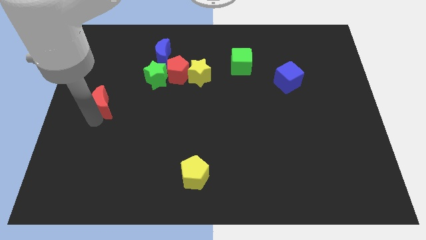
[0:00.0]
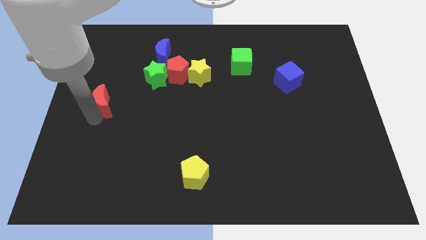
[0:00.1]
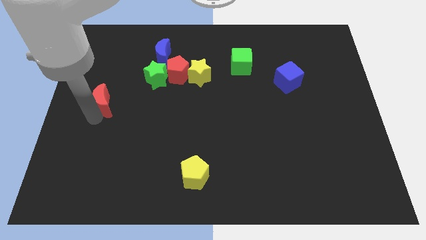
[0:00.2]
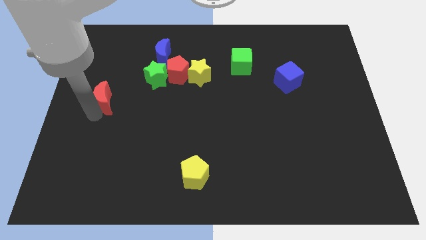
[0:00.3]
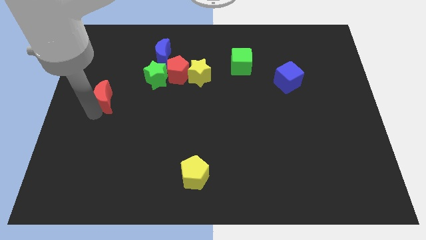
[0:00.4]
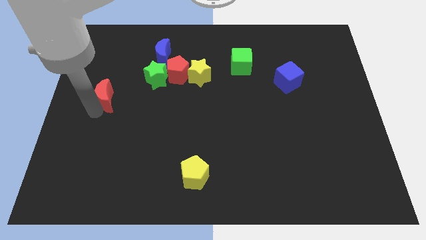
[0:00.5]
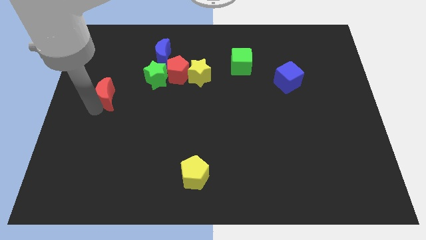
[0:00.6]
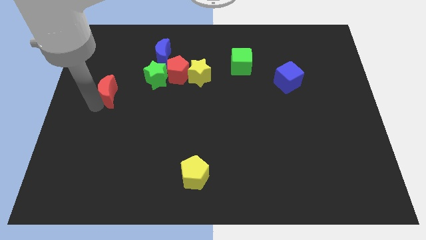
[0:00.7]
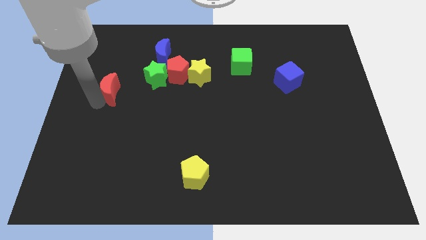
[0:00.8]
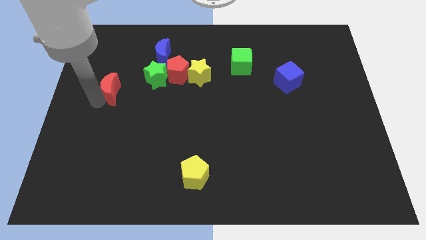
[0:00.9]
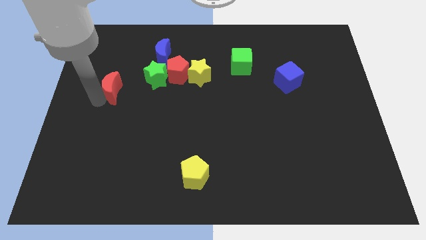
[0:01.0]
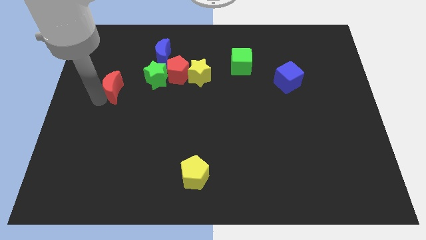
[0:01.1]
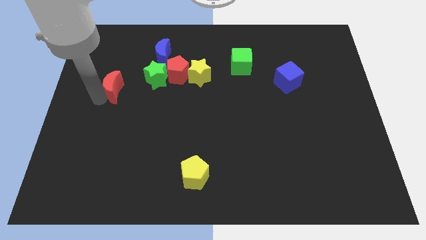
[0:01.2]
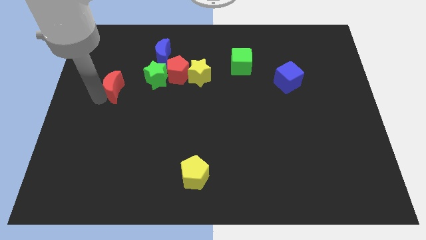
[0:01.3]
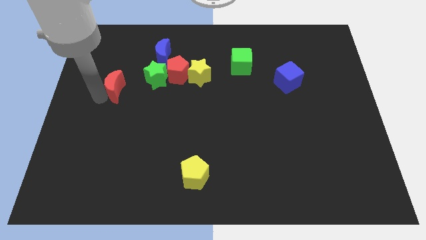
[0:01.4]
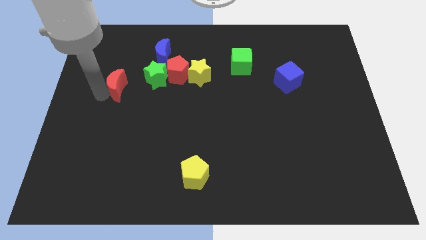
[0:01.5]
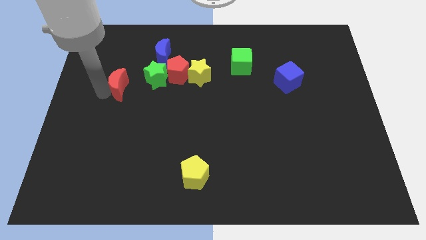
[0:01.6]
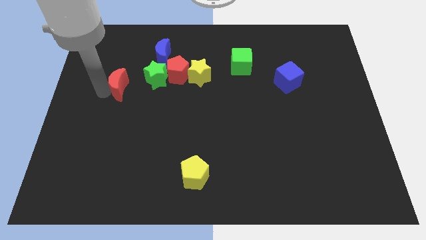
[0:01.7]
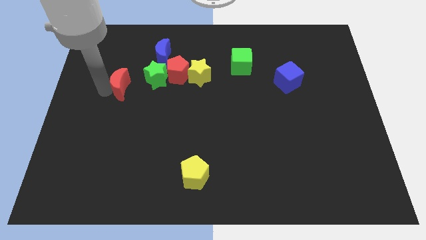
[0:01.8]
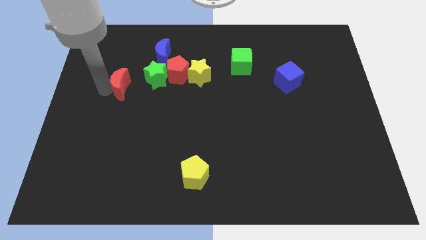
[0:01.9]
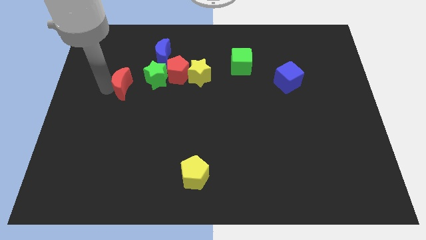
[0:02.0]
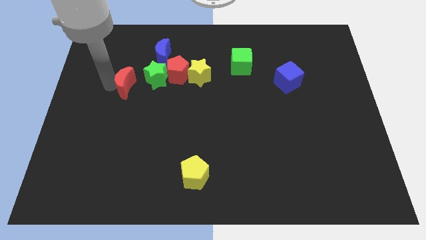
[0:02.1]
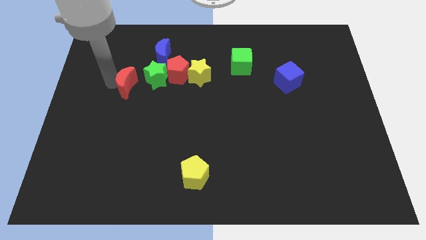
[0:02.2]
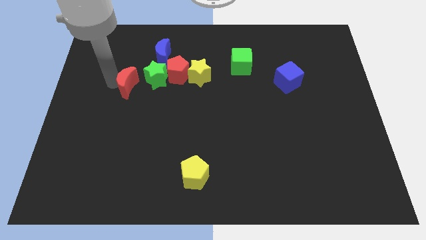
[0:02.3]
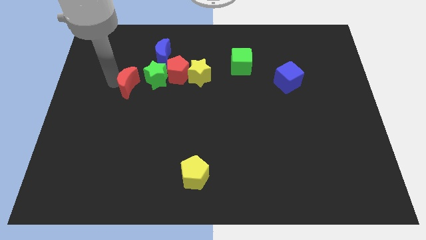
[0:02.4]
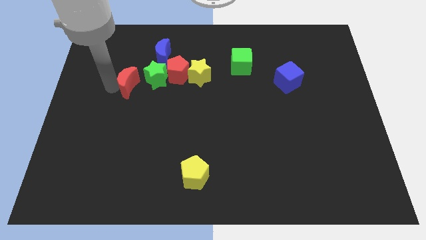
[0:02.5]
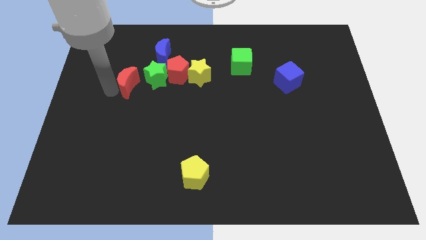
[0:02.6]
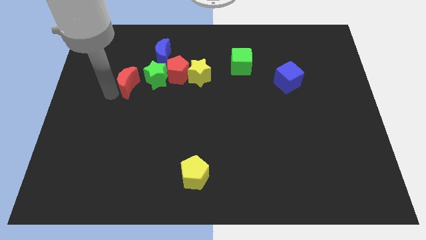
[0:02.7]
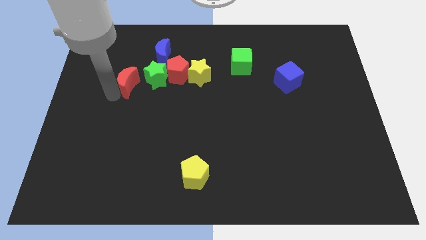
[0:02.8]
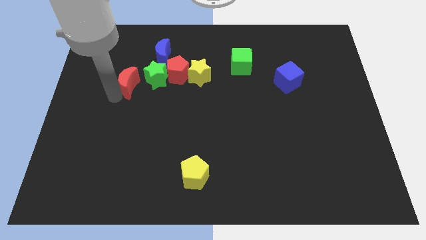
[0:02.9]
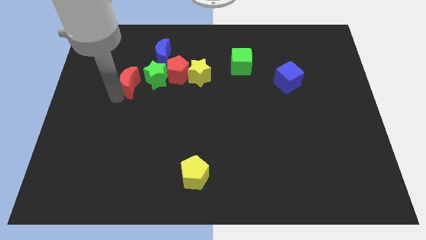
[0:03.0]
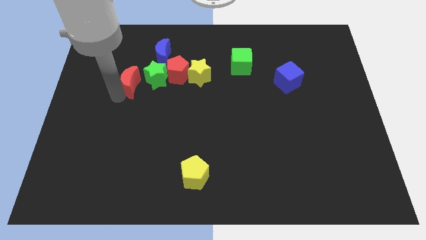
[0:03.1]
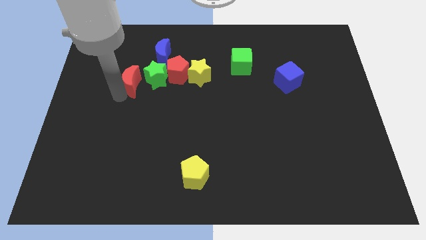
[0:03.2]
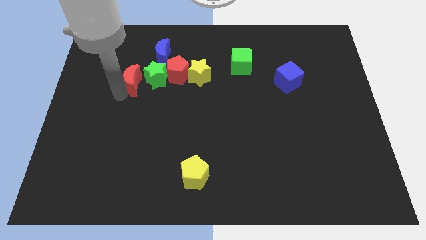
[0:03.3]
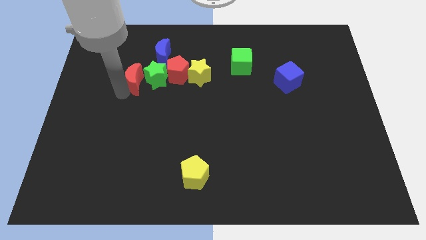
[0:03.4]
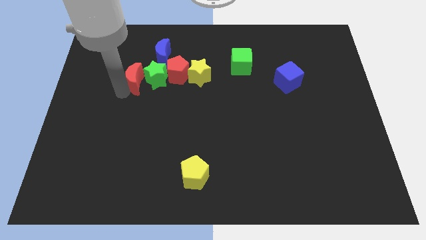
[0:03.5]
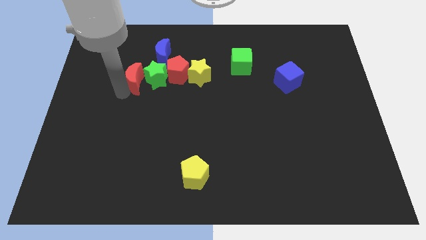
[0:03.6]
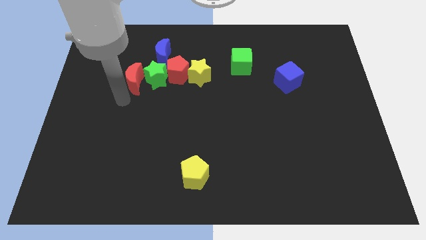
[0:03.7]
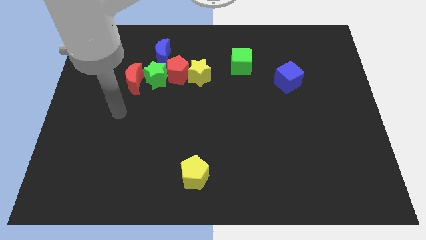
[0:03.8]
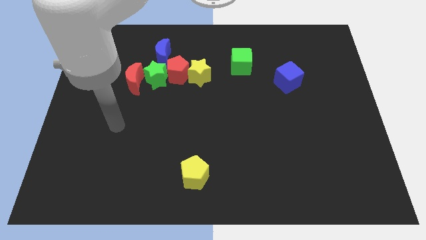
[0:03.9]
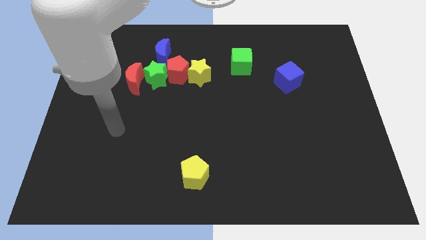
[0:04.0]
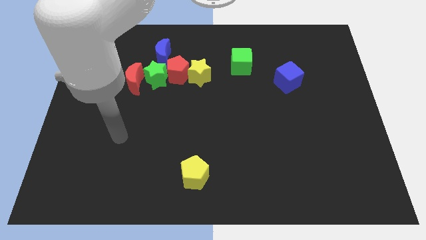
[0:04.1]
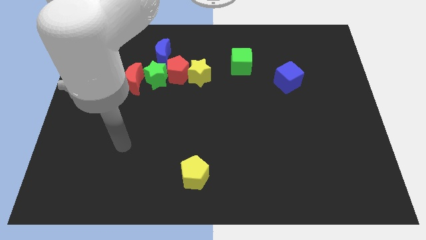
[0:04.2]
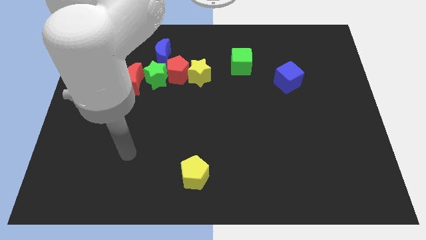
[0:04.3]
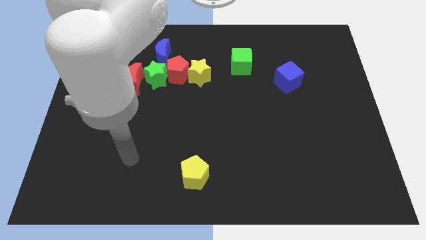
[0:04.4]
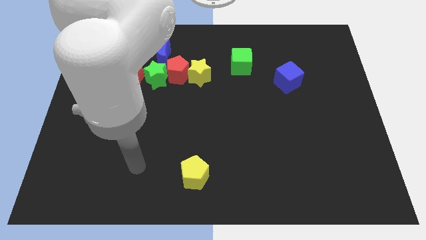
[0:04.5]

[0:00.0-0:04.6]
place the red crescent to the left side of the green star

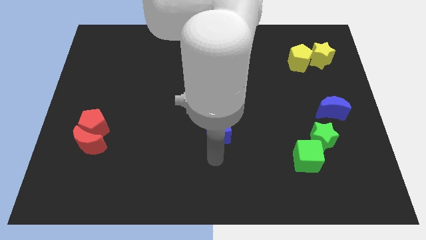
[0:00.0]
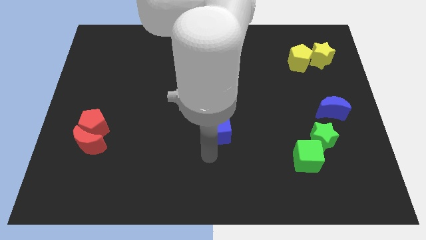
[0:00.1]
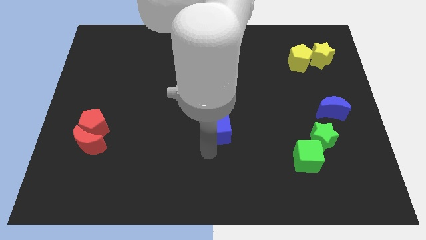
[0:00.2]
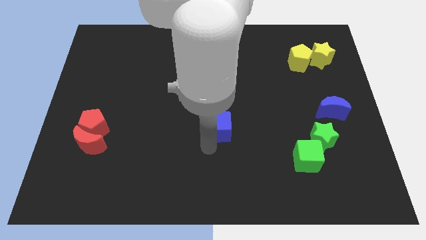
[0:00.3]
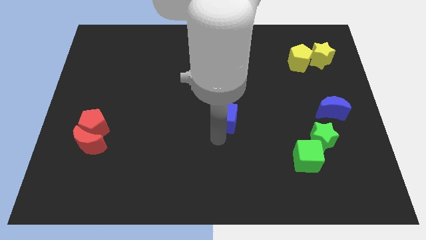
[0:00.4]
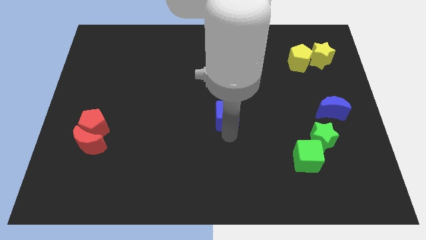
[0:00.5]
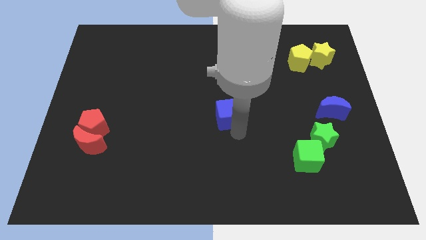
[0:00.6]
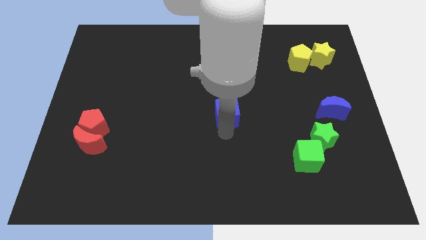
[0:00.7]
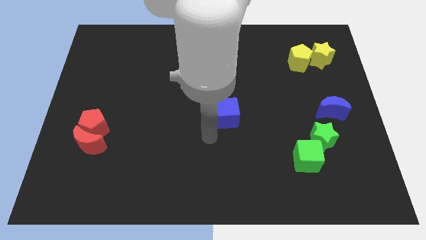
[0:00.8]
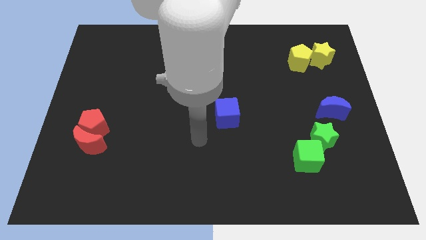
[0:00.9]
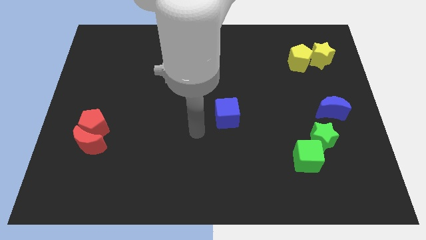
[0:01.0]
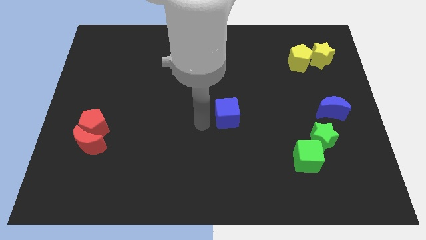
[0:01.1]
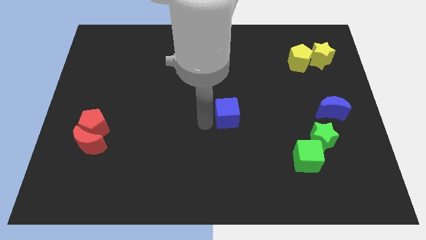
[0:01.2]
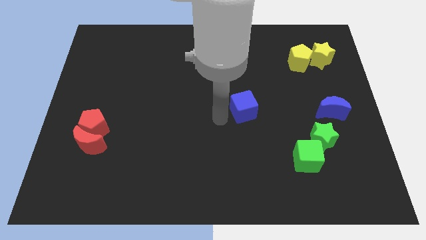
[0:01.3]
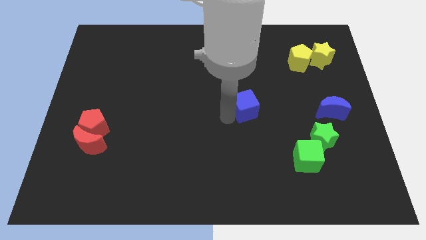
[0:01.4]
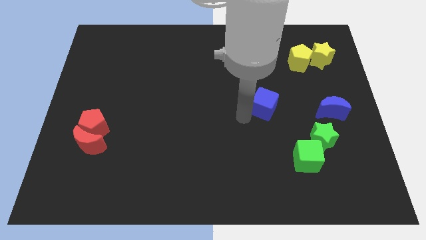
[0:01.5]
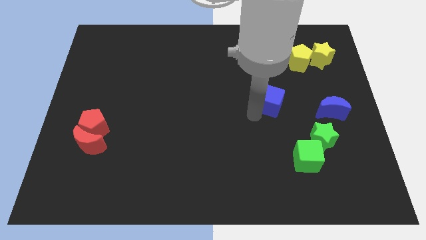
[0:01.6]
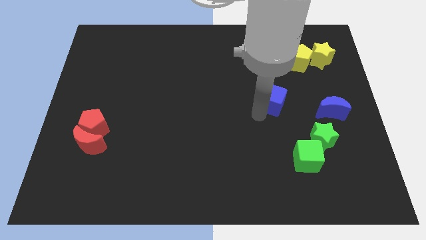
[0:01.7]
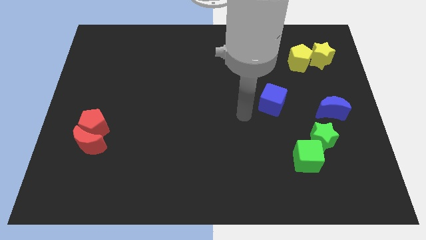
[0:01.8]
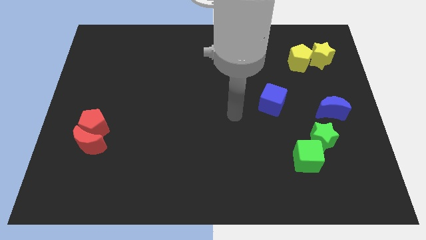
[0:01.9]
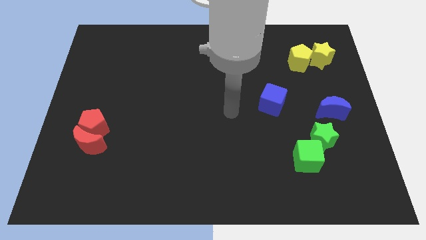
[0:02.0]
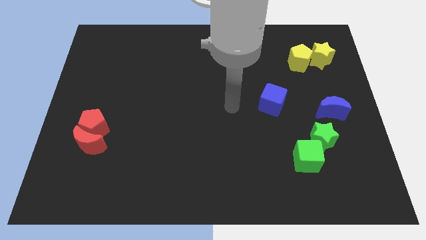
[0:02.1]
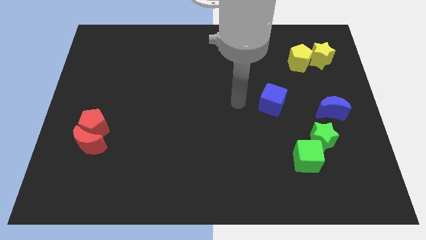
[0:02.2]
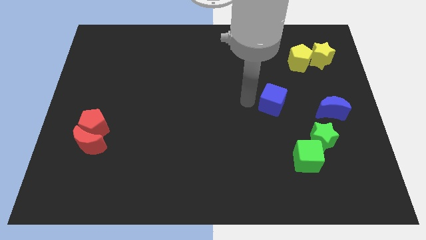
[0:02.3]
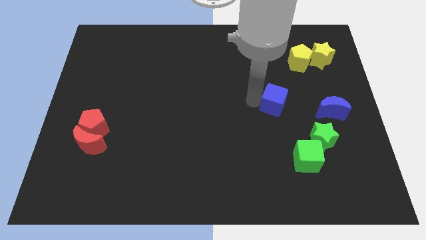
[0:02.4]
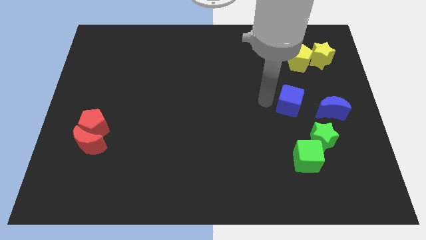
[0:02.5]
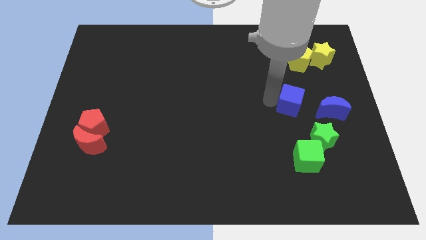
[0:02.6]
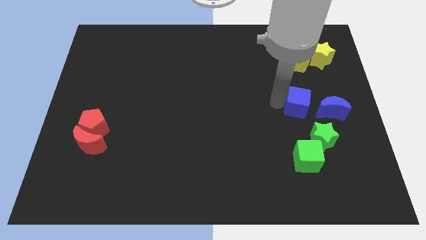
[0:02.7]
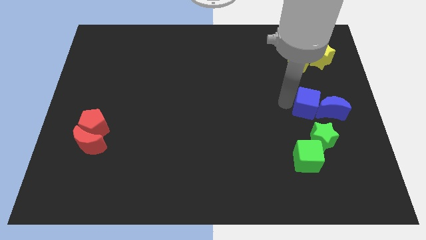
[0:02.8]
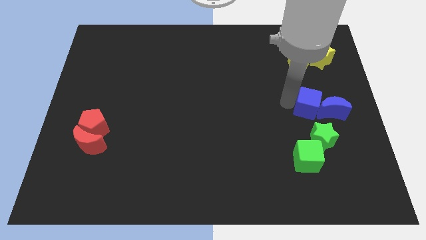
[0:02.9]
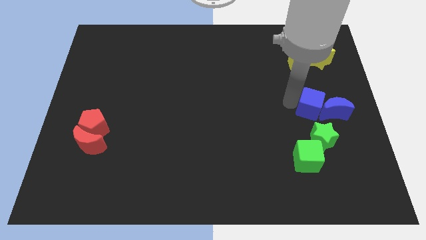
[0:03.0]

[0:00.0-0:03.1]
move the blue cube left to the blue crescent

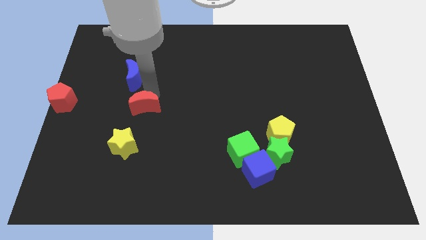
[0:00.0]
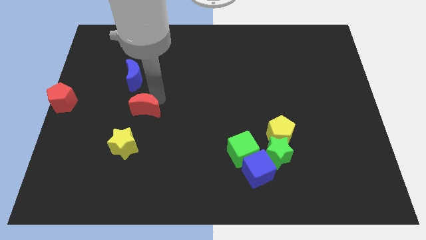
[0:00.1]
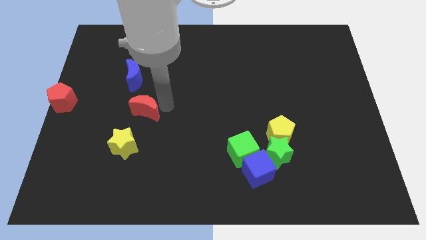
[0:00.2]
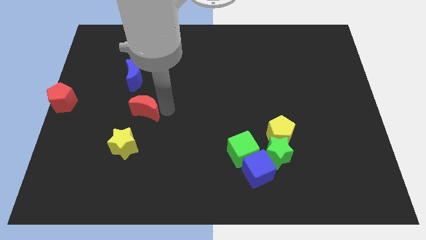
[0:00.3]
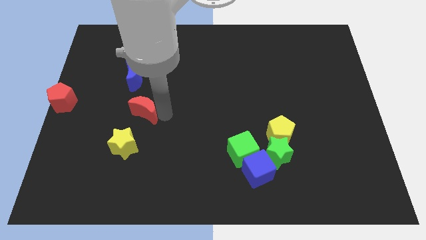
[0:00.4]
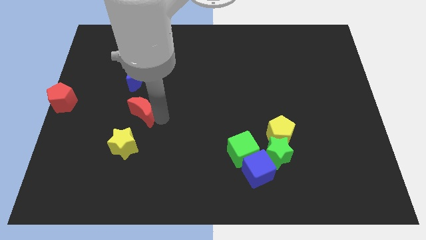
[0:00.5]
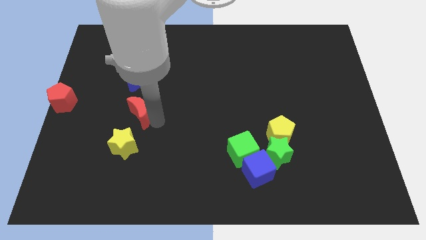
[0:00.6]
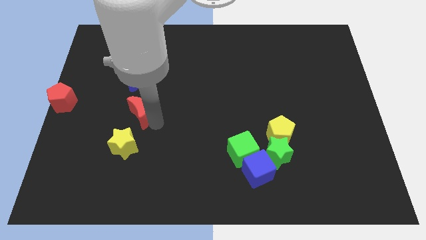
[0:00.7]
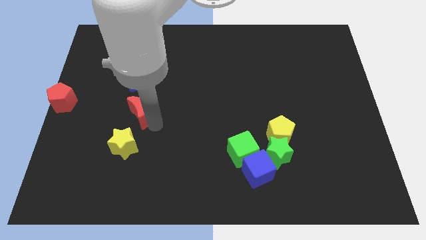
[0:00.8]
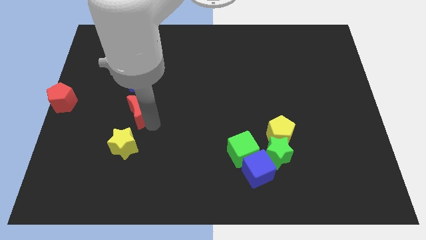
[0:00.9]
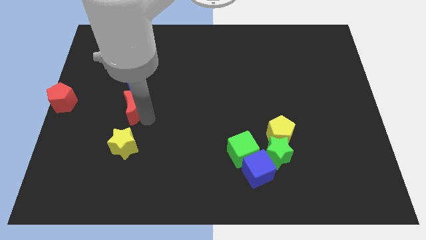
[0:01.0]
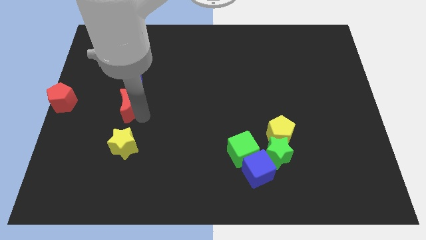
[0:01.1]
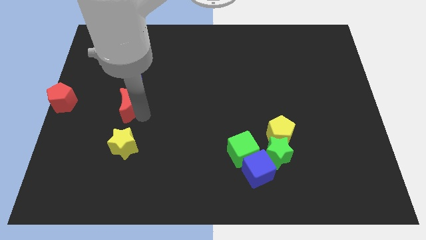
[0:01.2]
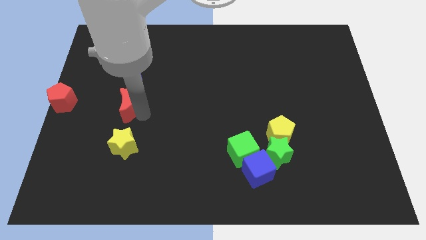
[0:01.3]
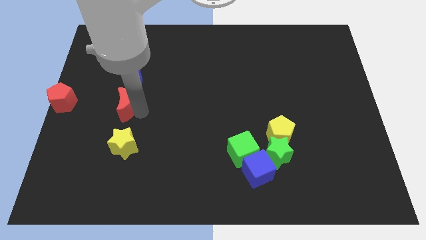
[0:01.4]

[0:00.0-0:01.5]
place the red crescent in between blue crescent and yellow star
